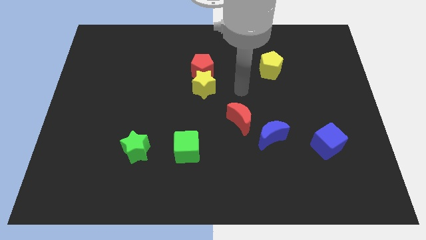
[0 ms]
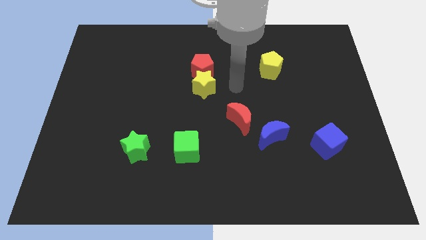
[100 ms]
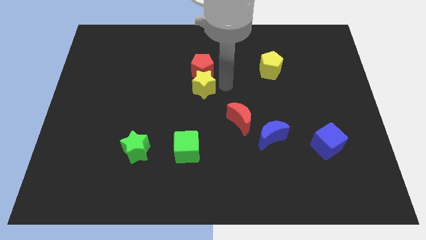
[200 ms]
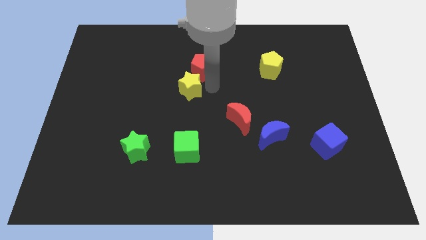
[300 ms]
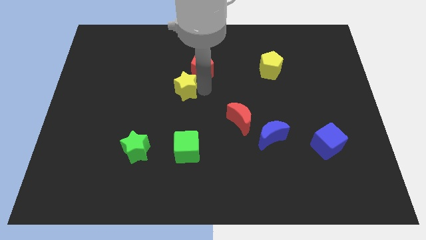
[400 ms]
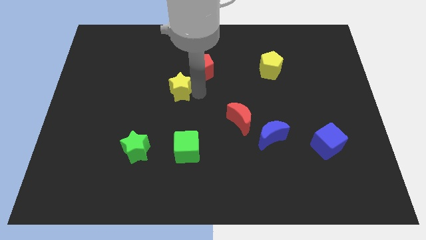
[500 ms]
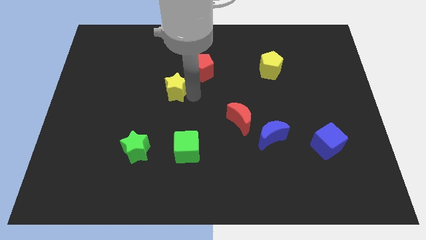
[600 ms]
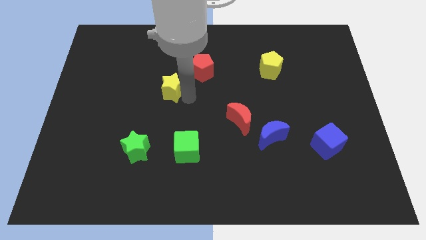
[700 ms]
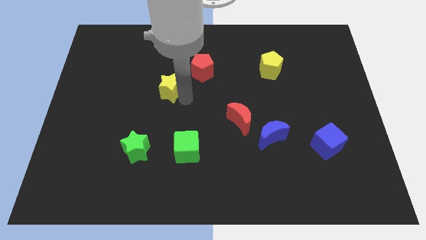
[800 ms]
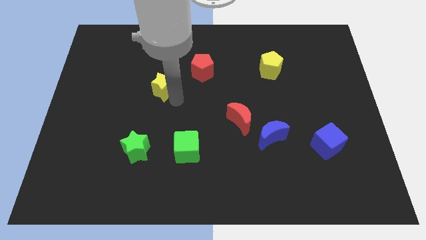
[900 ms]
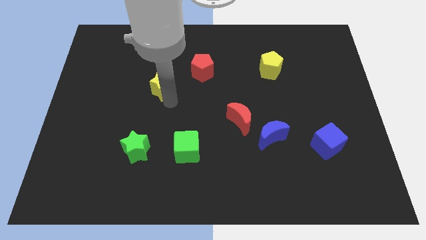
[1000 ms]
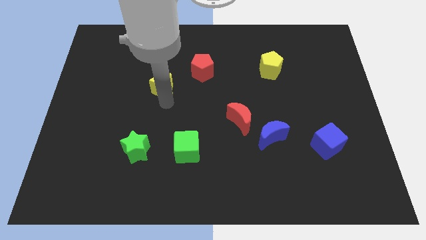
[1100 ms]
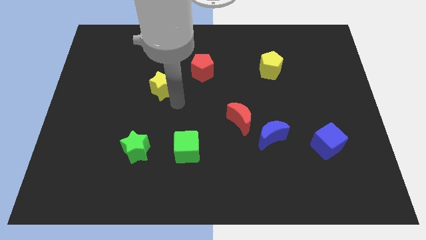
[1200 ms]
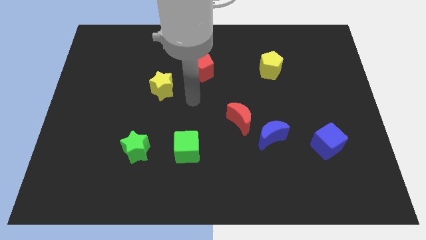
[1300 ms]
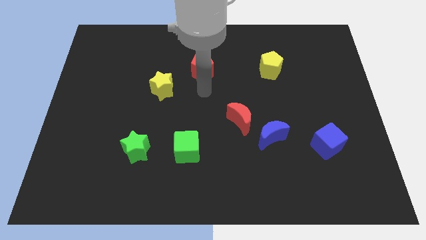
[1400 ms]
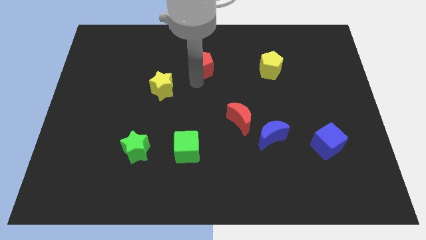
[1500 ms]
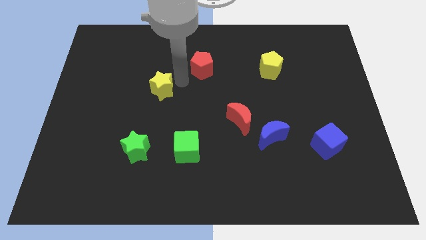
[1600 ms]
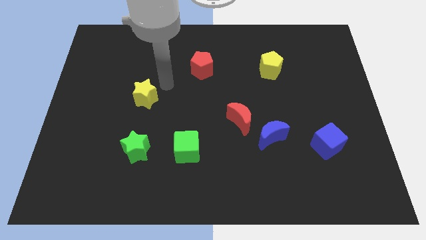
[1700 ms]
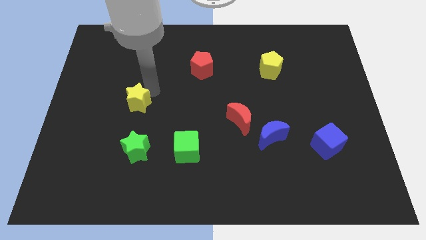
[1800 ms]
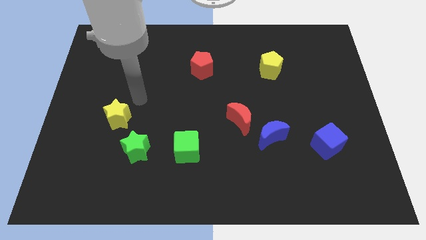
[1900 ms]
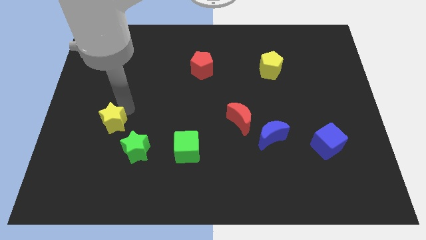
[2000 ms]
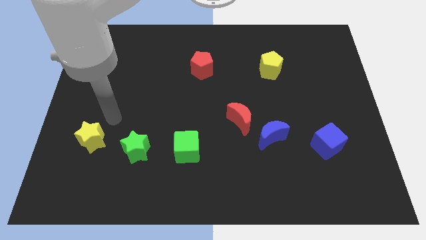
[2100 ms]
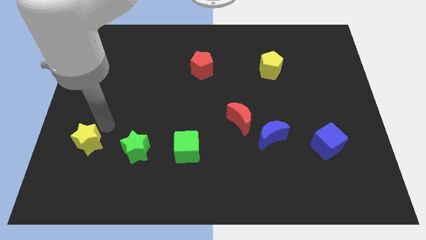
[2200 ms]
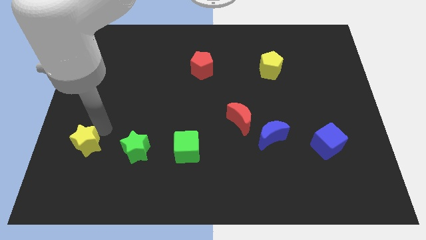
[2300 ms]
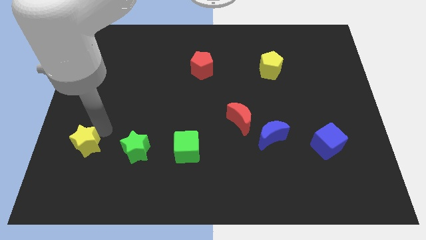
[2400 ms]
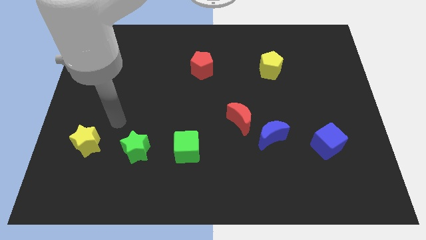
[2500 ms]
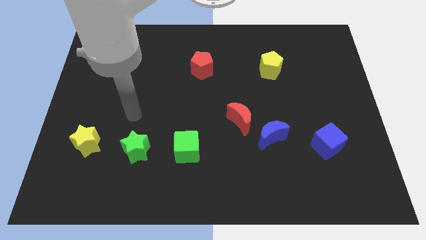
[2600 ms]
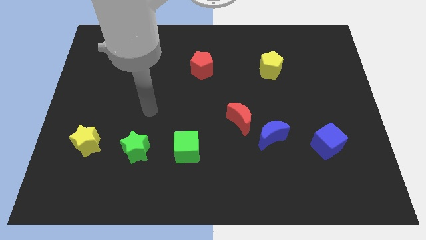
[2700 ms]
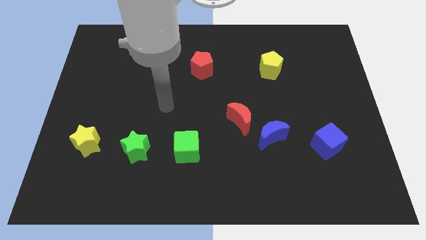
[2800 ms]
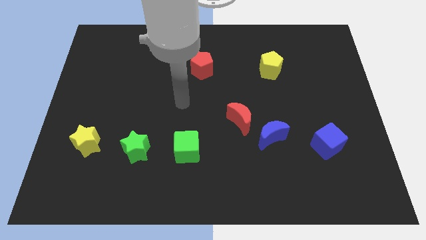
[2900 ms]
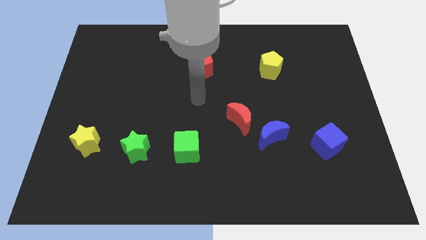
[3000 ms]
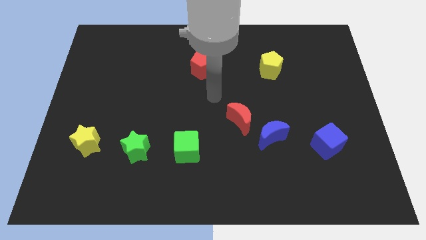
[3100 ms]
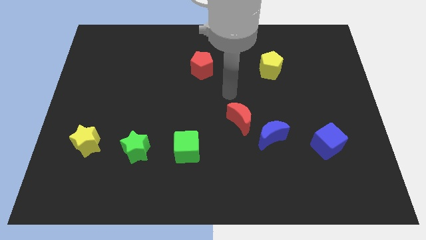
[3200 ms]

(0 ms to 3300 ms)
move the yellow star left to the green star

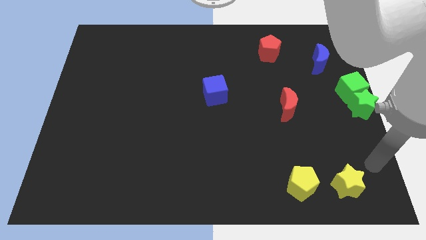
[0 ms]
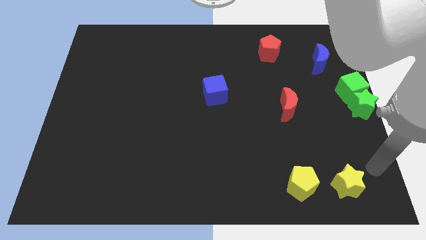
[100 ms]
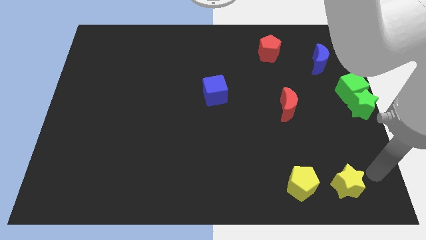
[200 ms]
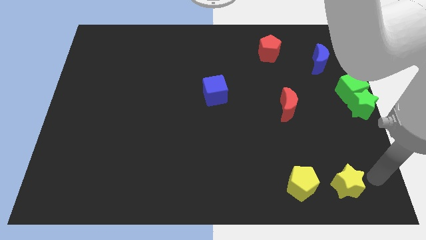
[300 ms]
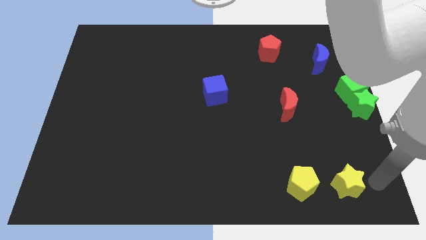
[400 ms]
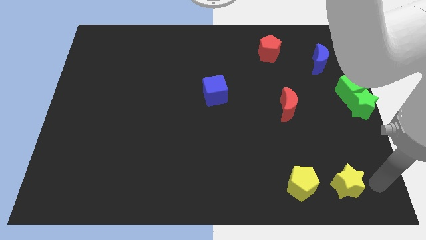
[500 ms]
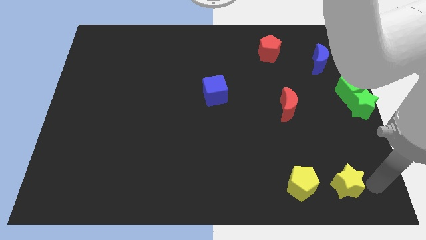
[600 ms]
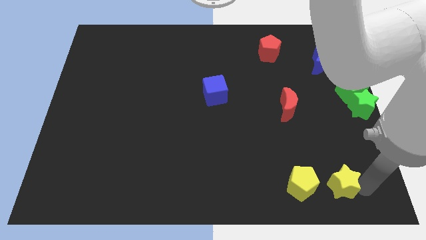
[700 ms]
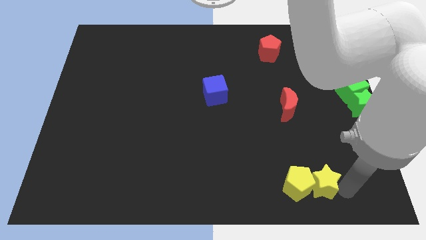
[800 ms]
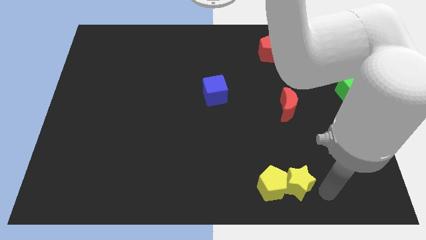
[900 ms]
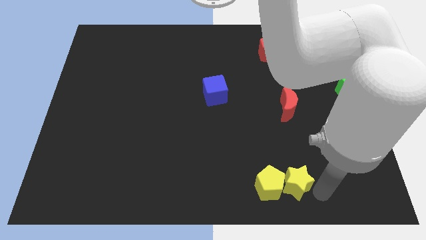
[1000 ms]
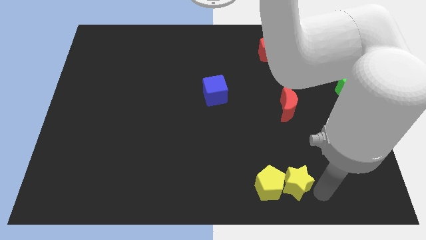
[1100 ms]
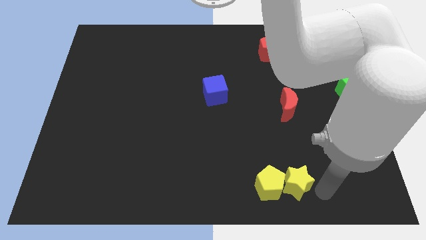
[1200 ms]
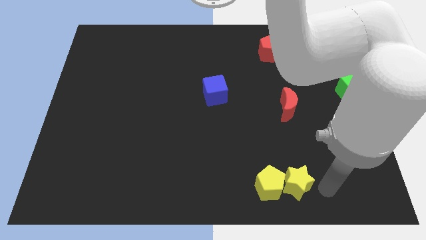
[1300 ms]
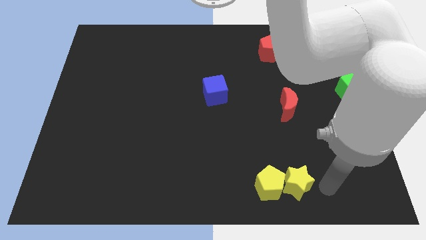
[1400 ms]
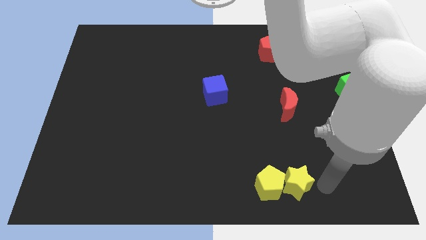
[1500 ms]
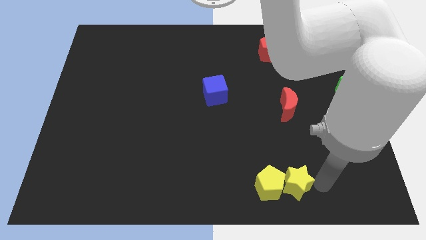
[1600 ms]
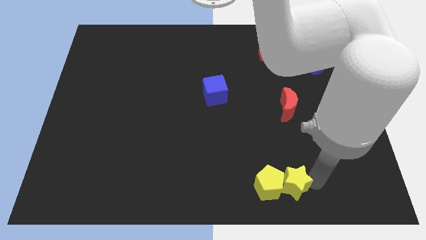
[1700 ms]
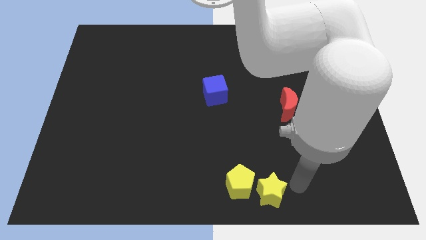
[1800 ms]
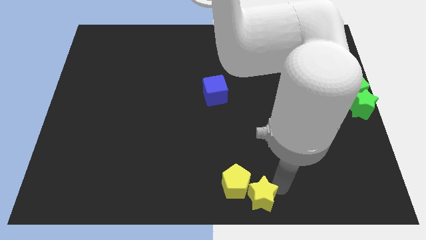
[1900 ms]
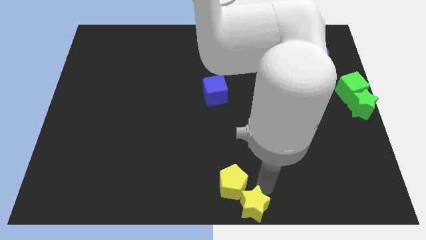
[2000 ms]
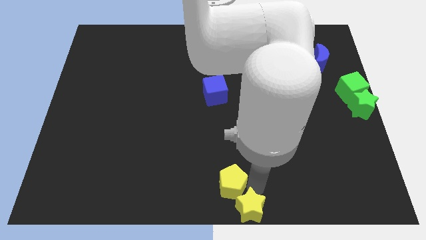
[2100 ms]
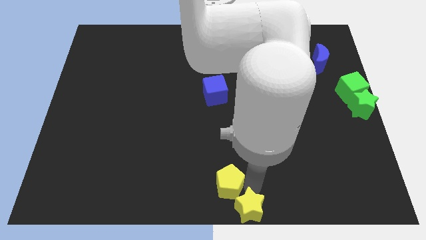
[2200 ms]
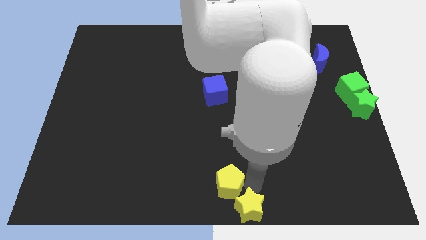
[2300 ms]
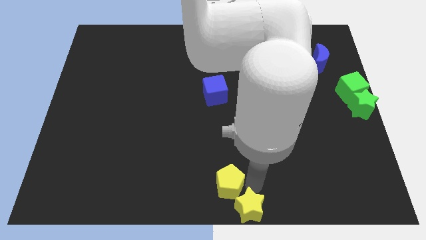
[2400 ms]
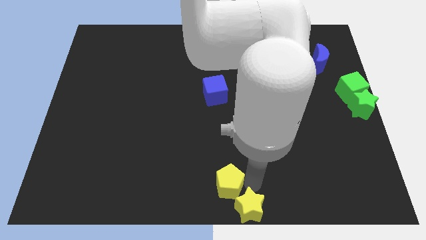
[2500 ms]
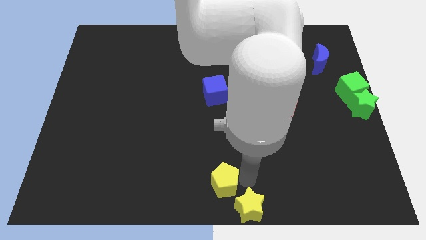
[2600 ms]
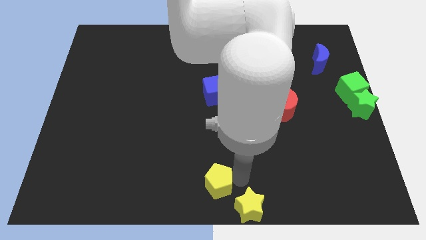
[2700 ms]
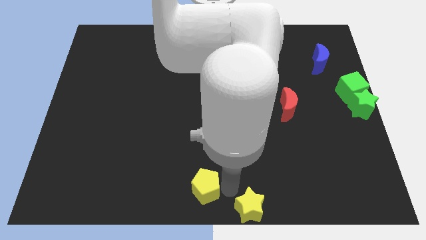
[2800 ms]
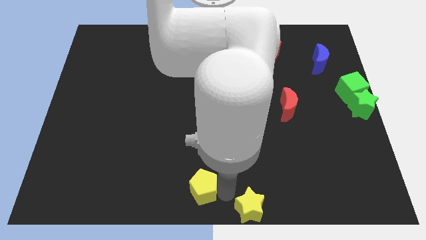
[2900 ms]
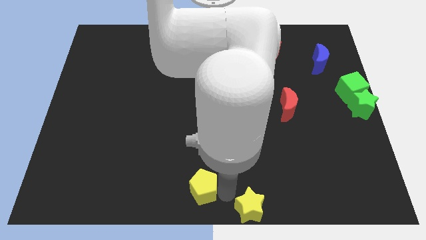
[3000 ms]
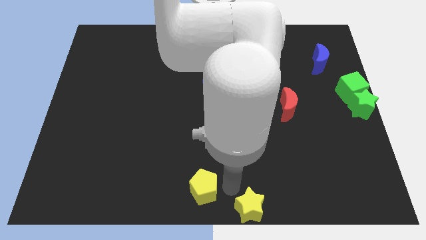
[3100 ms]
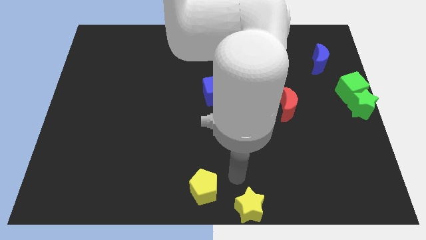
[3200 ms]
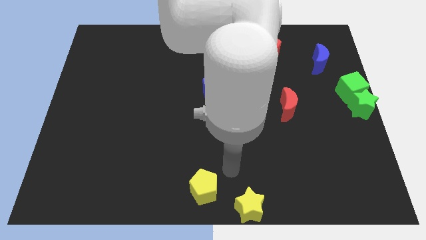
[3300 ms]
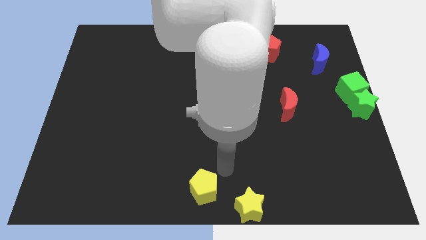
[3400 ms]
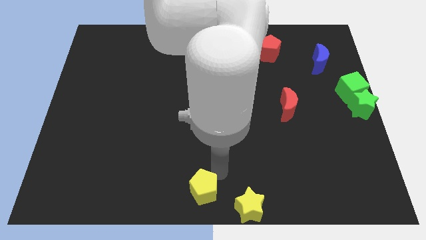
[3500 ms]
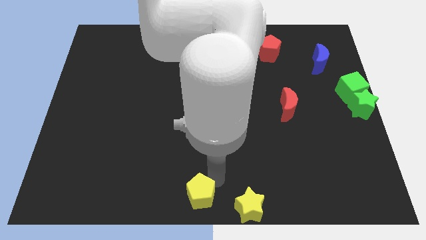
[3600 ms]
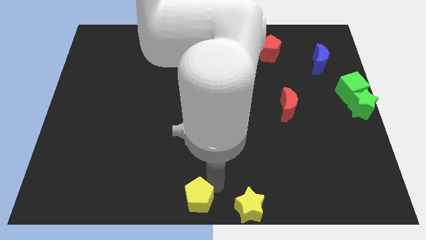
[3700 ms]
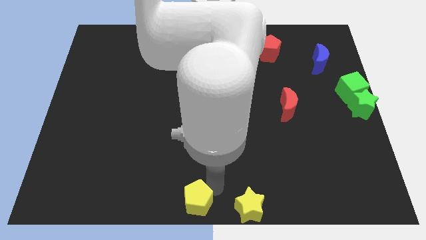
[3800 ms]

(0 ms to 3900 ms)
place the yellow staryellow pentagon towards the bottom center of the board

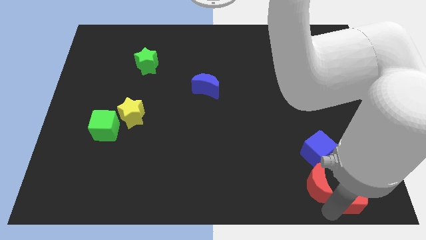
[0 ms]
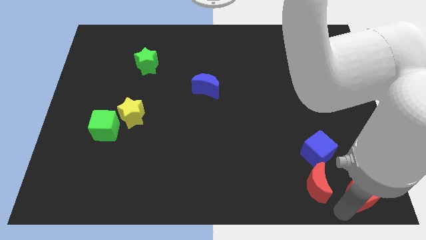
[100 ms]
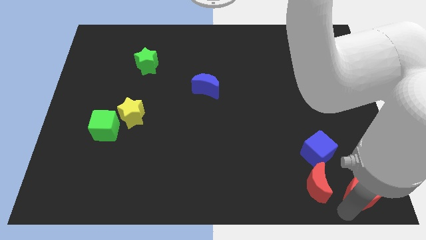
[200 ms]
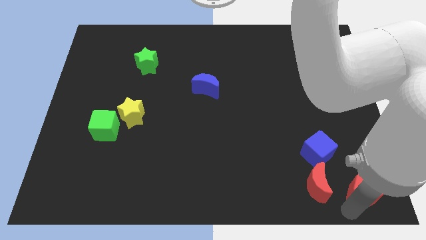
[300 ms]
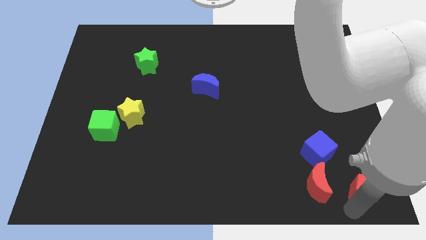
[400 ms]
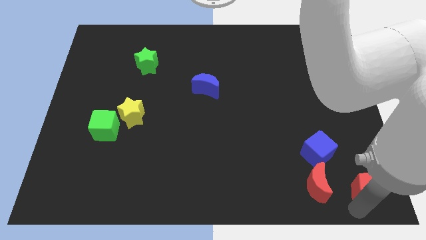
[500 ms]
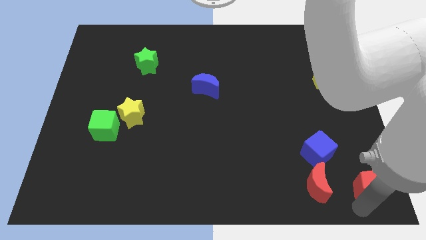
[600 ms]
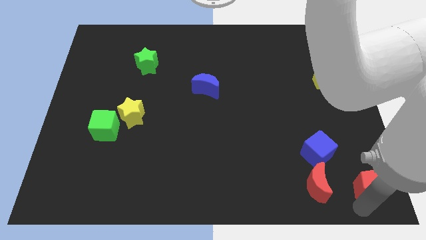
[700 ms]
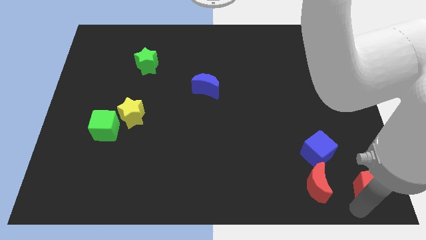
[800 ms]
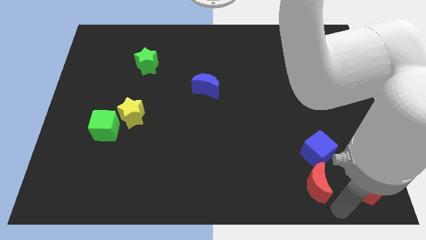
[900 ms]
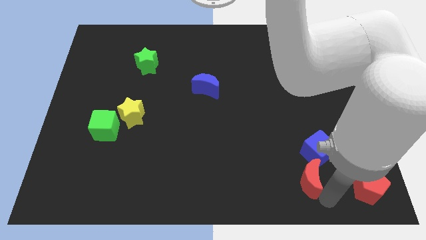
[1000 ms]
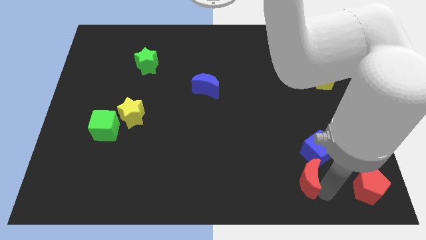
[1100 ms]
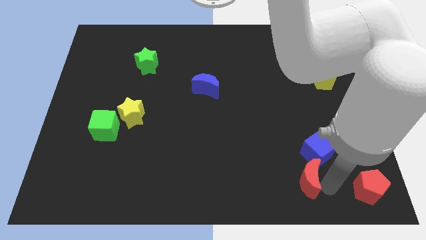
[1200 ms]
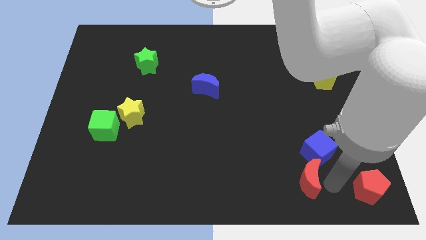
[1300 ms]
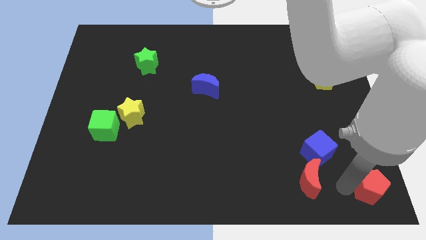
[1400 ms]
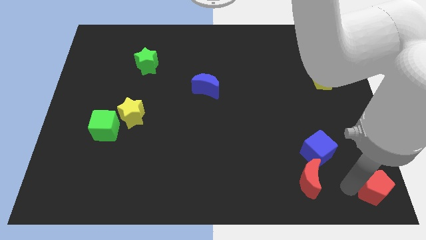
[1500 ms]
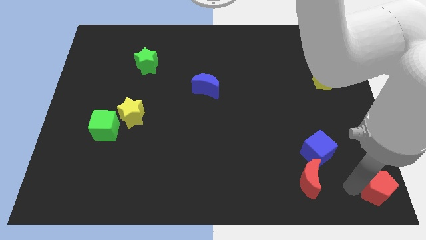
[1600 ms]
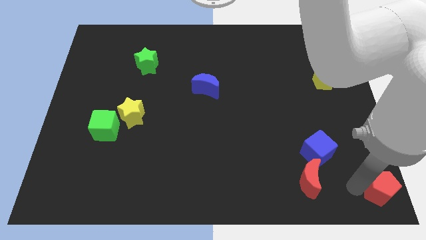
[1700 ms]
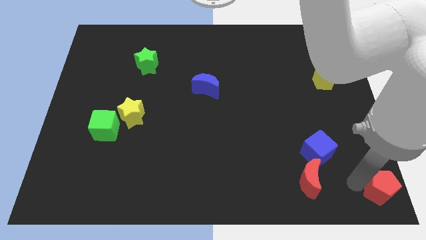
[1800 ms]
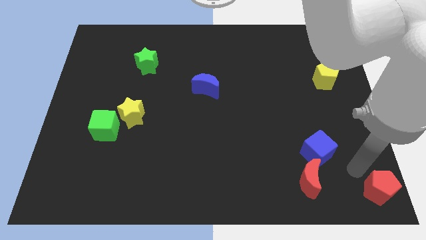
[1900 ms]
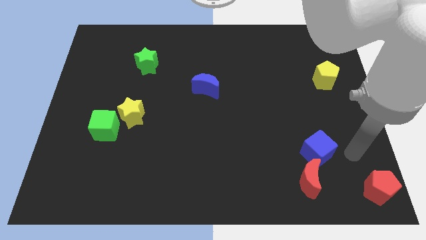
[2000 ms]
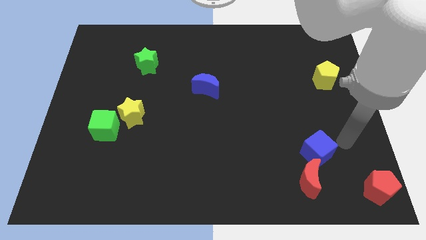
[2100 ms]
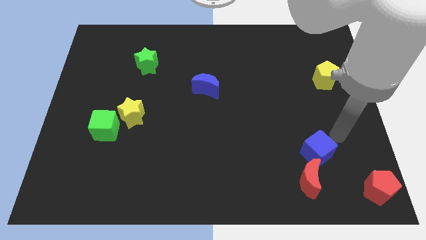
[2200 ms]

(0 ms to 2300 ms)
place the red pentagon to the bottom right
